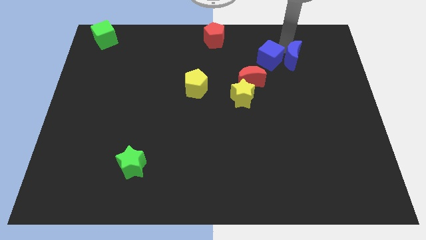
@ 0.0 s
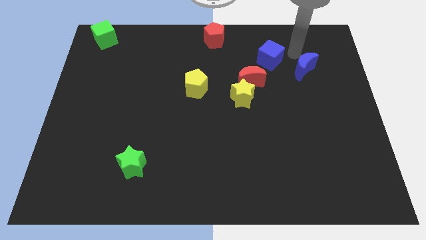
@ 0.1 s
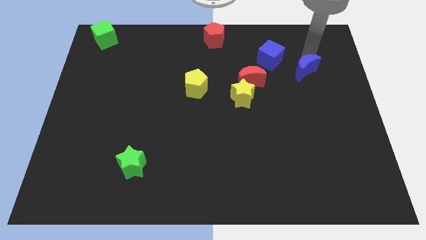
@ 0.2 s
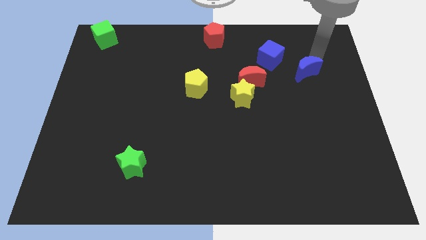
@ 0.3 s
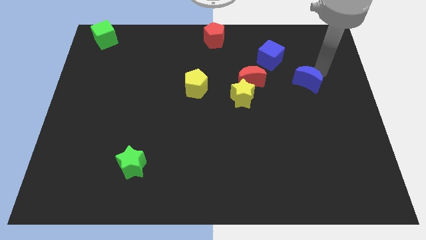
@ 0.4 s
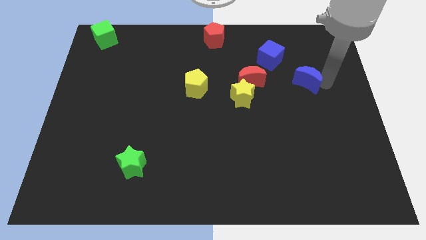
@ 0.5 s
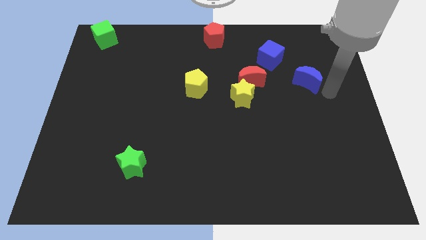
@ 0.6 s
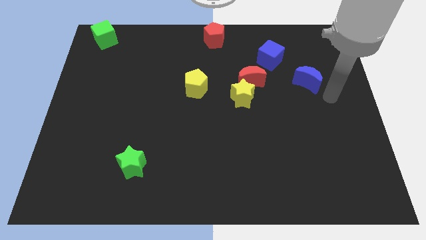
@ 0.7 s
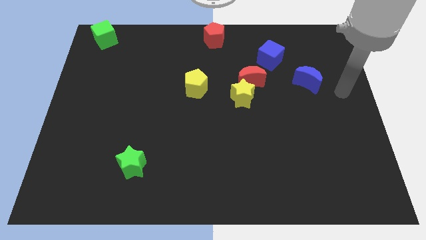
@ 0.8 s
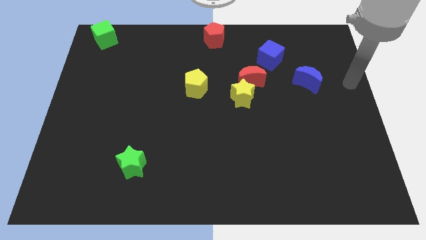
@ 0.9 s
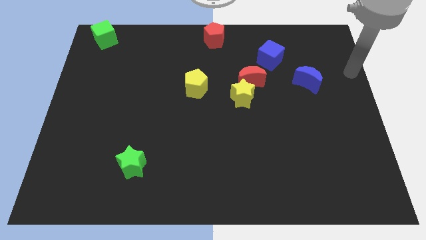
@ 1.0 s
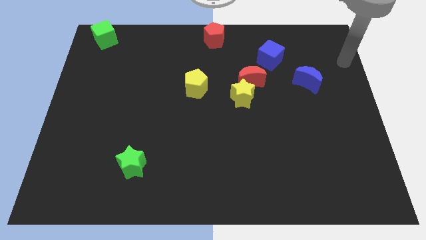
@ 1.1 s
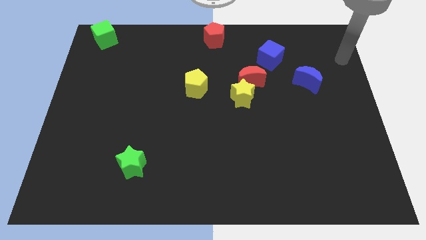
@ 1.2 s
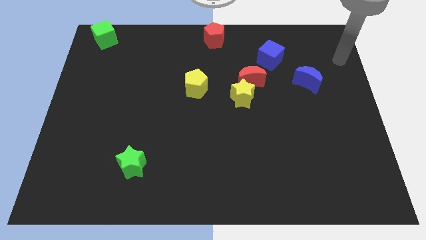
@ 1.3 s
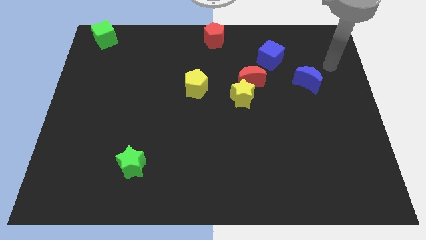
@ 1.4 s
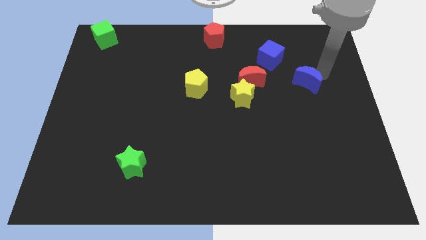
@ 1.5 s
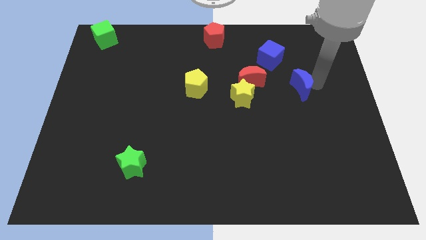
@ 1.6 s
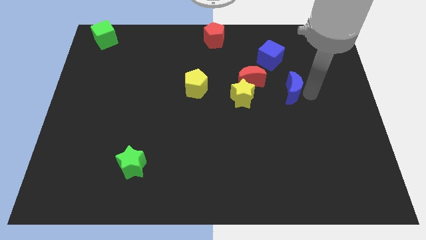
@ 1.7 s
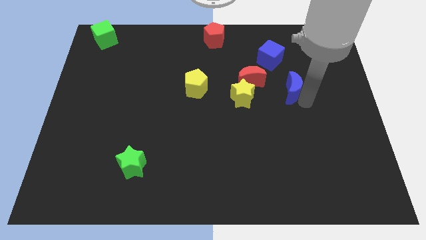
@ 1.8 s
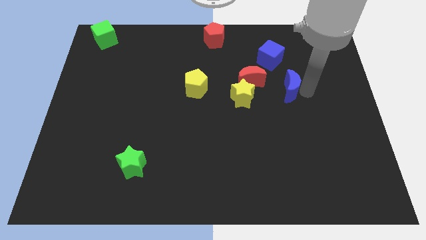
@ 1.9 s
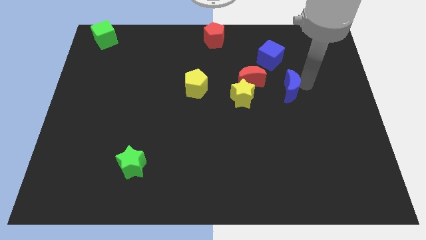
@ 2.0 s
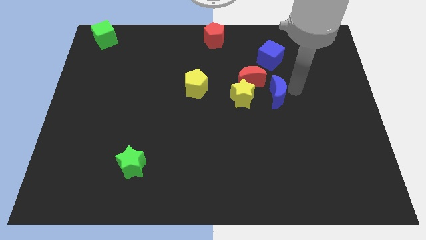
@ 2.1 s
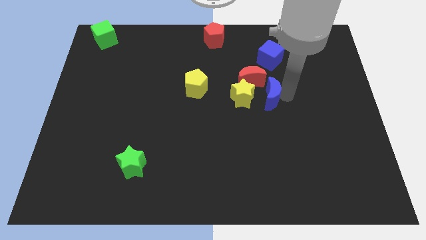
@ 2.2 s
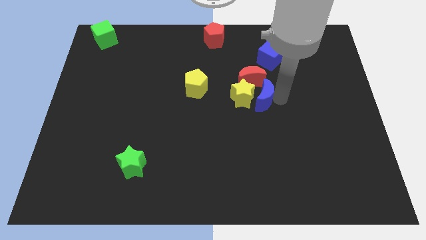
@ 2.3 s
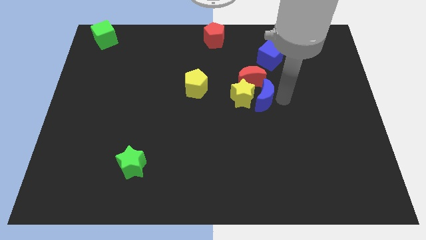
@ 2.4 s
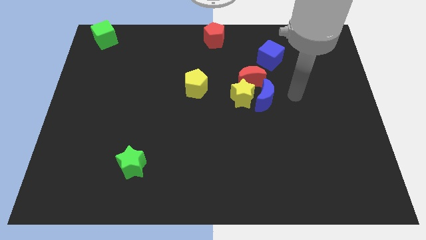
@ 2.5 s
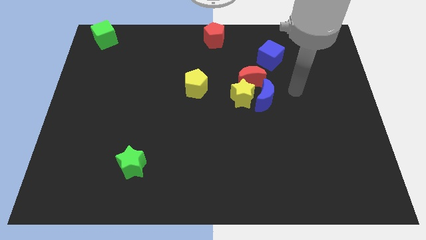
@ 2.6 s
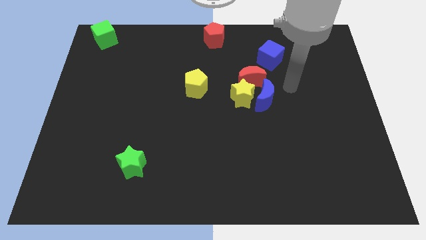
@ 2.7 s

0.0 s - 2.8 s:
push blue crescent to the right of the yellow star

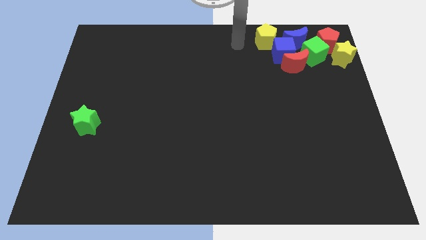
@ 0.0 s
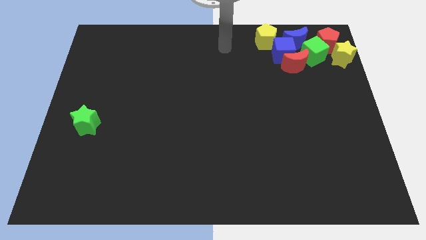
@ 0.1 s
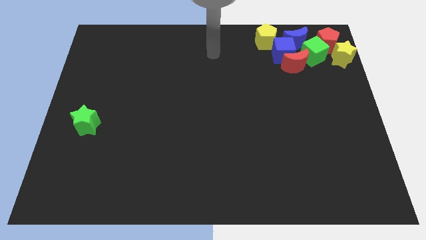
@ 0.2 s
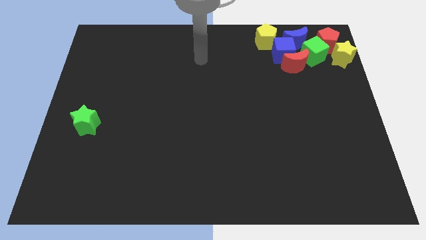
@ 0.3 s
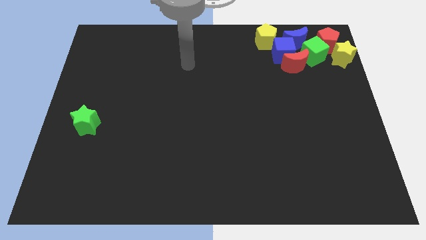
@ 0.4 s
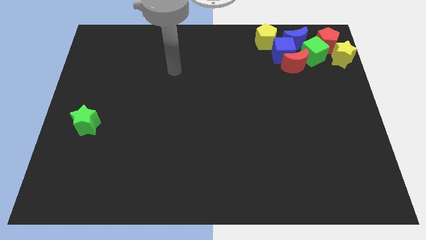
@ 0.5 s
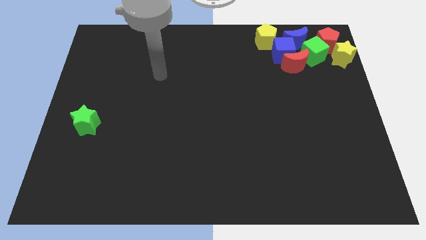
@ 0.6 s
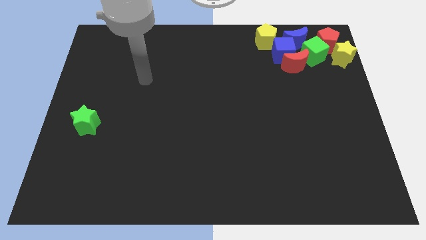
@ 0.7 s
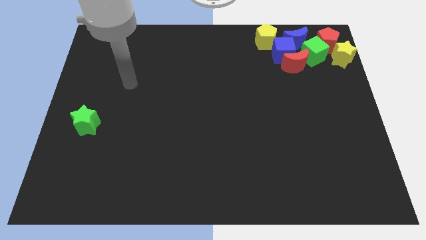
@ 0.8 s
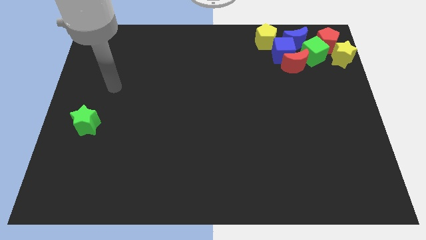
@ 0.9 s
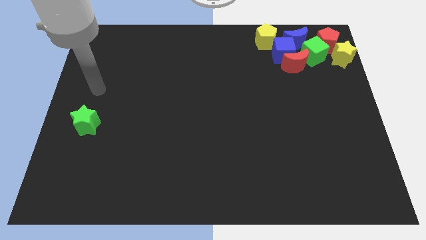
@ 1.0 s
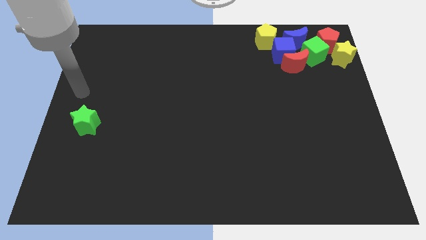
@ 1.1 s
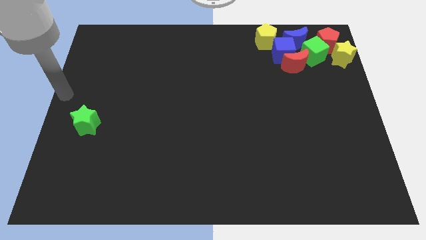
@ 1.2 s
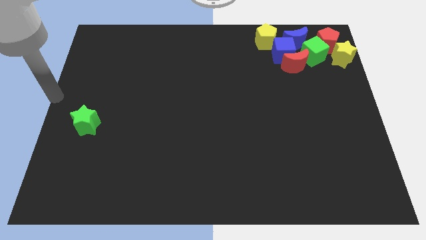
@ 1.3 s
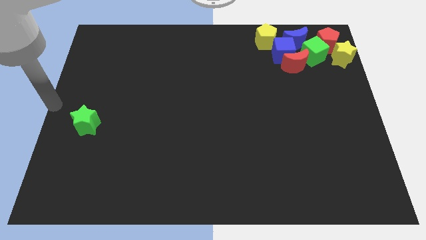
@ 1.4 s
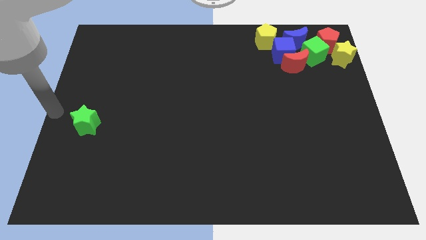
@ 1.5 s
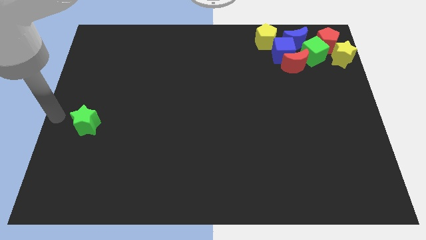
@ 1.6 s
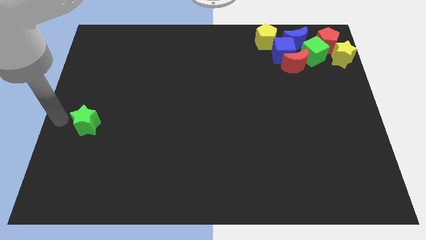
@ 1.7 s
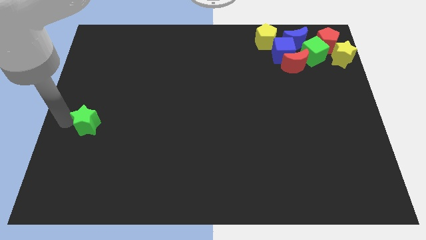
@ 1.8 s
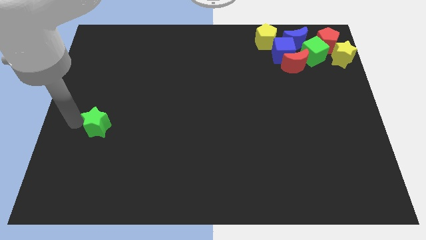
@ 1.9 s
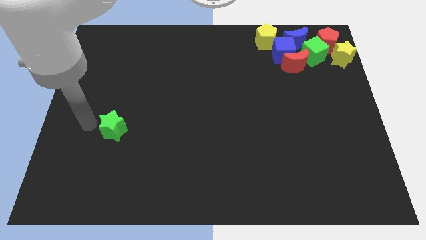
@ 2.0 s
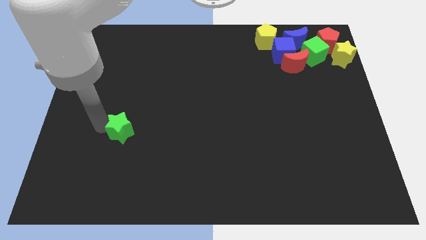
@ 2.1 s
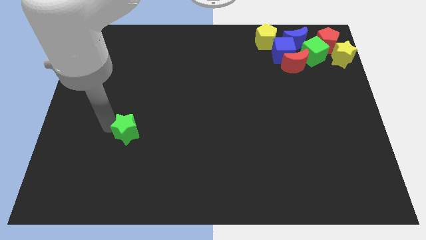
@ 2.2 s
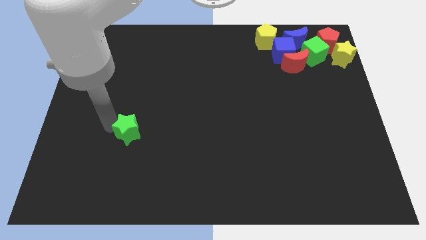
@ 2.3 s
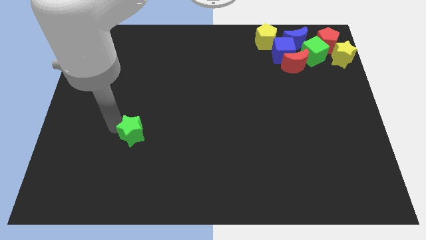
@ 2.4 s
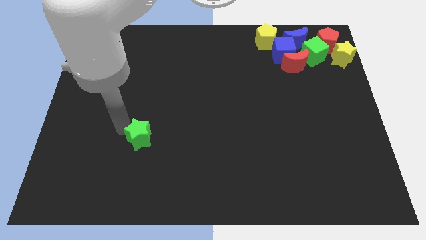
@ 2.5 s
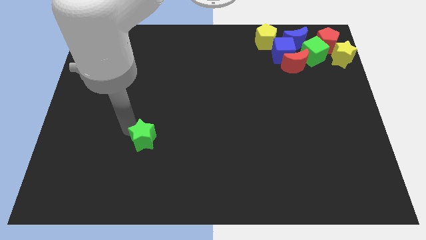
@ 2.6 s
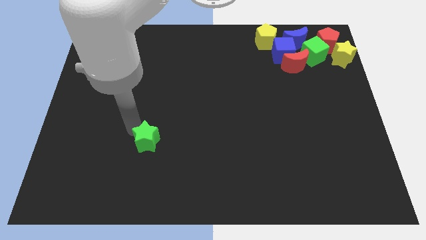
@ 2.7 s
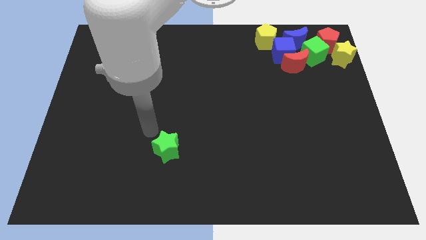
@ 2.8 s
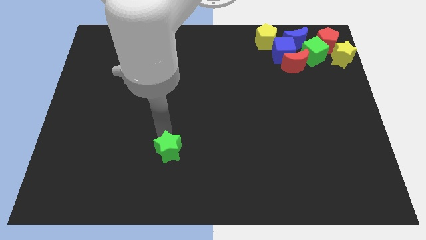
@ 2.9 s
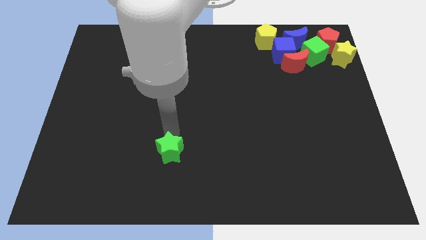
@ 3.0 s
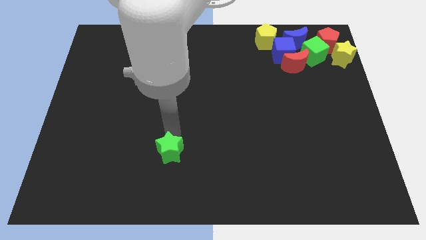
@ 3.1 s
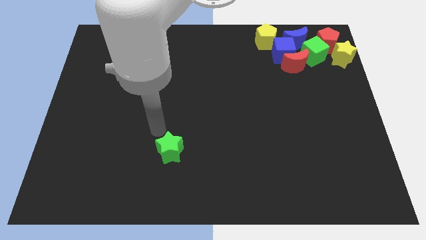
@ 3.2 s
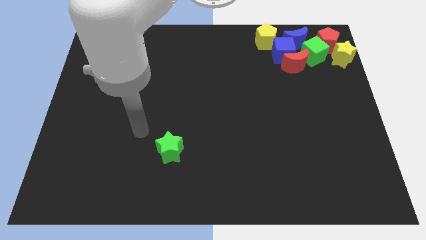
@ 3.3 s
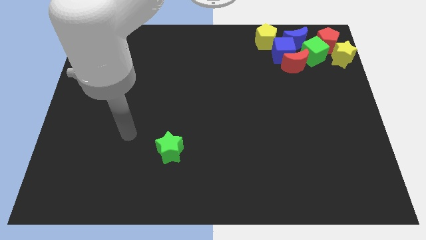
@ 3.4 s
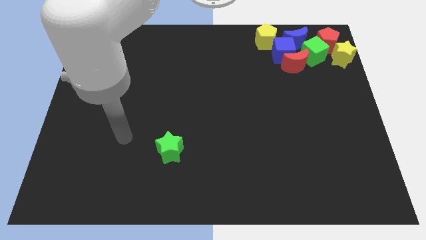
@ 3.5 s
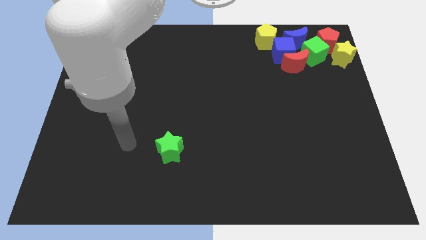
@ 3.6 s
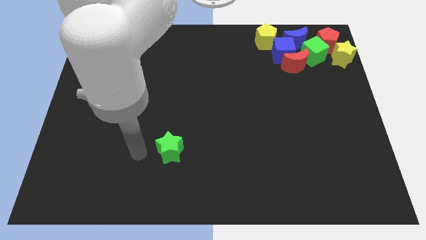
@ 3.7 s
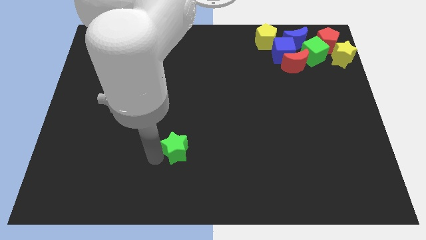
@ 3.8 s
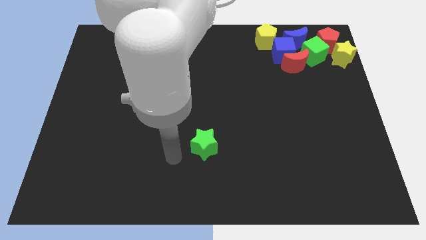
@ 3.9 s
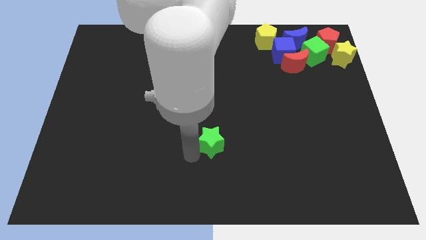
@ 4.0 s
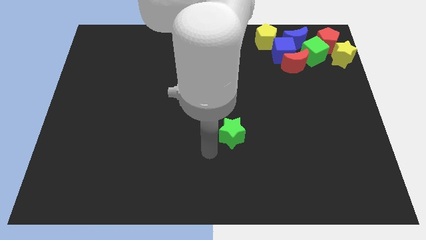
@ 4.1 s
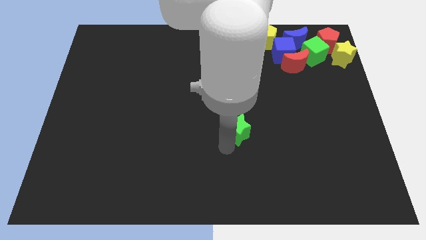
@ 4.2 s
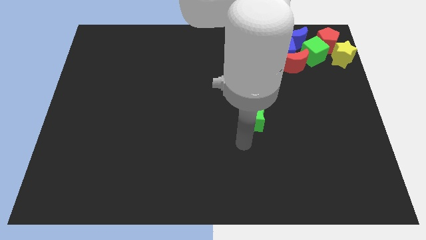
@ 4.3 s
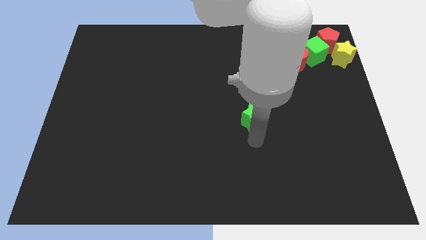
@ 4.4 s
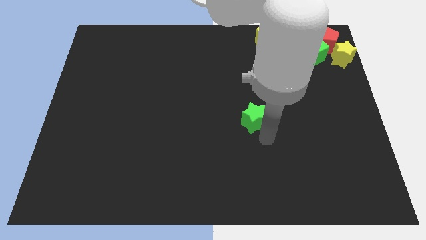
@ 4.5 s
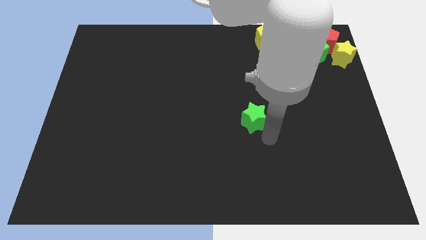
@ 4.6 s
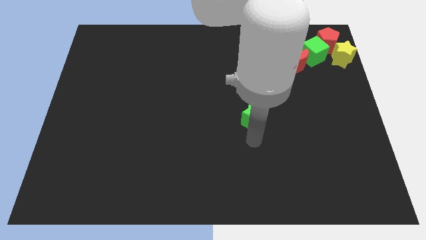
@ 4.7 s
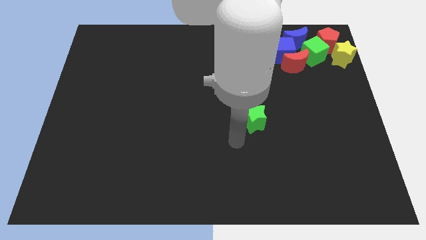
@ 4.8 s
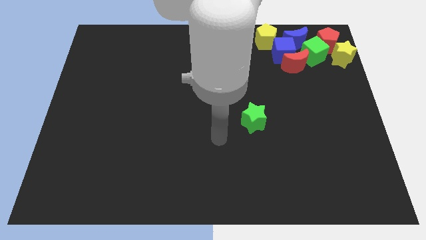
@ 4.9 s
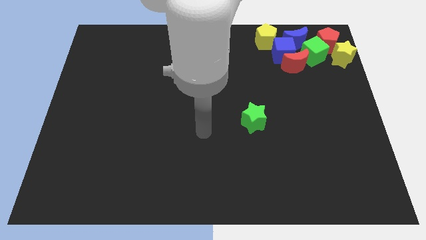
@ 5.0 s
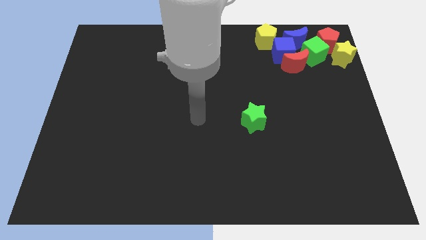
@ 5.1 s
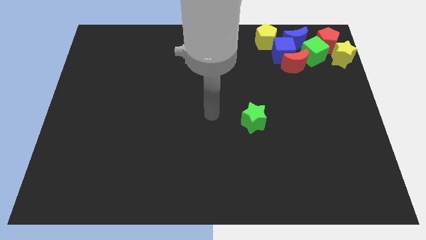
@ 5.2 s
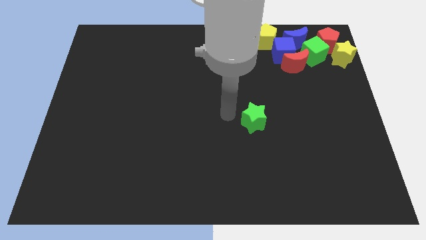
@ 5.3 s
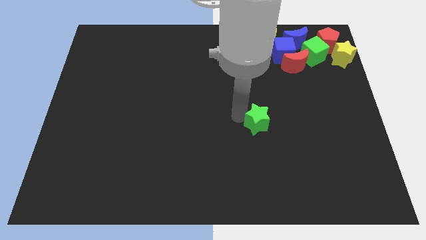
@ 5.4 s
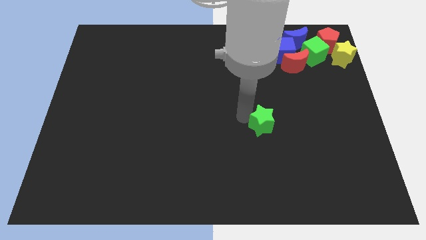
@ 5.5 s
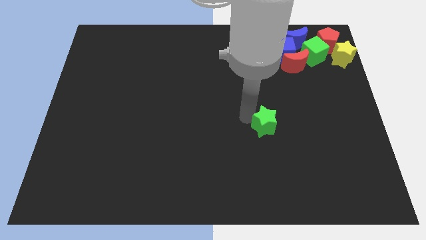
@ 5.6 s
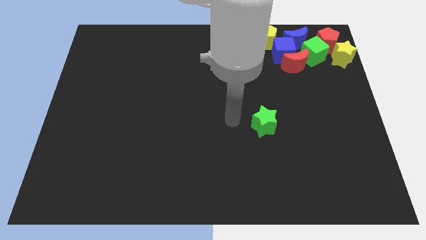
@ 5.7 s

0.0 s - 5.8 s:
push the green star towards the right side of the board

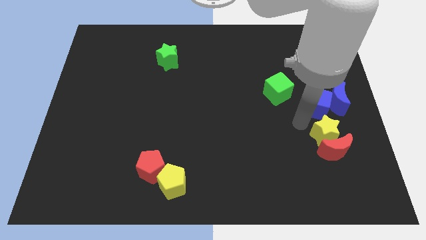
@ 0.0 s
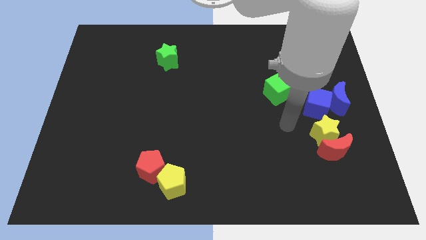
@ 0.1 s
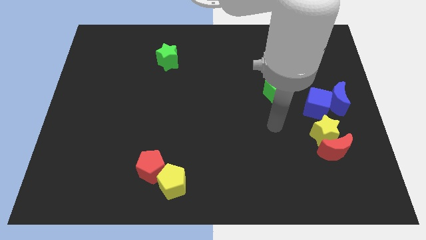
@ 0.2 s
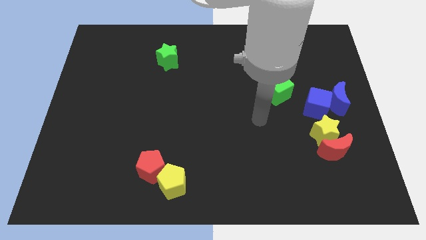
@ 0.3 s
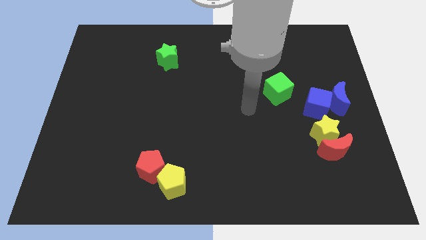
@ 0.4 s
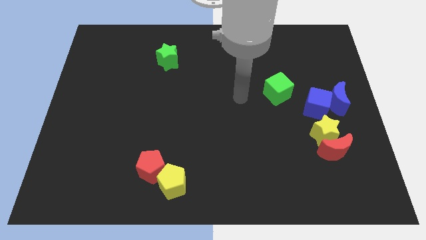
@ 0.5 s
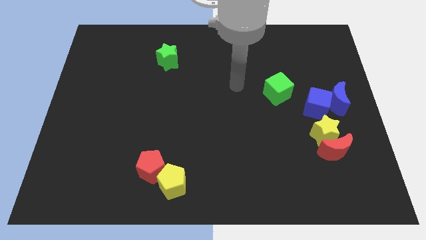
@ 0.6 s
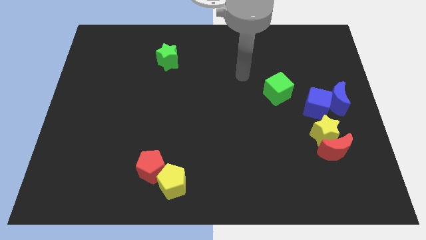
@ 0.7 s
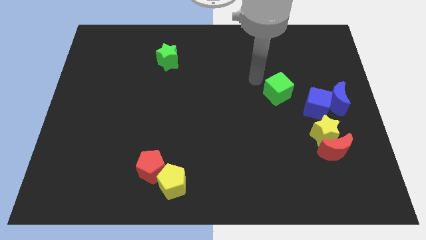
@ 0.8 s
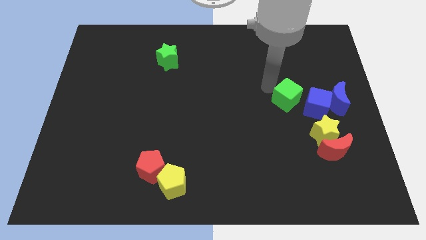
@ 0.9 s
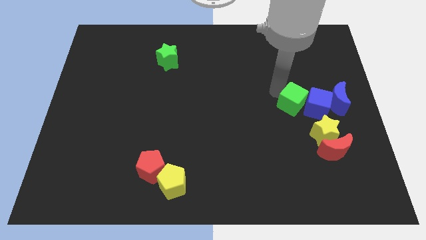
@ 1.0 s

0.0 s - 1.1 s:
push the green cube towards the left side of blue cube
